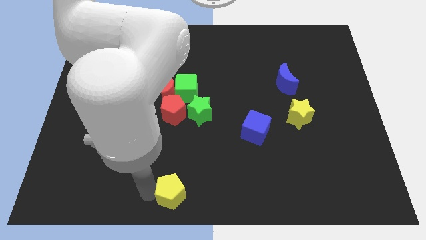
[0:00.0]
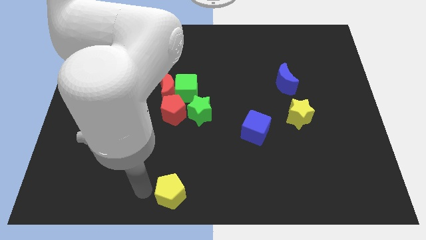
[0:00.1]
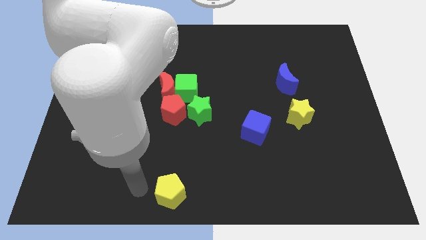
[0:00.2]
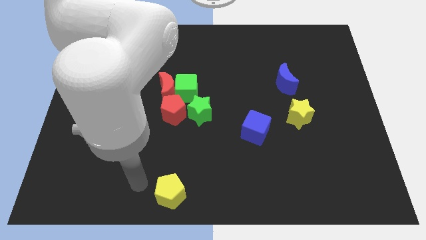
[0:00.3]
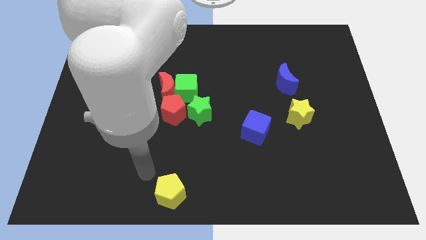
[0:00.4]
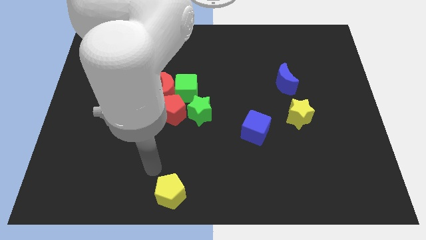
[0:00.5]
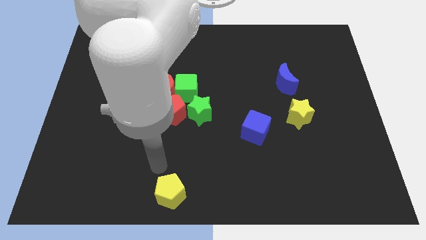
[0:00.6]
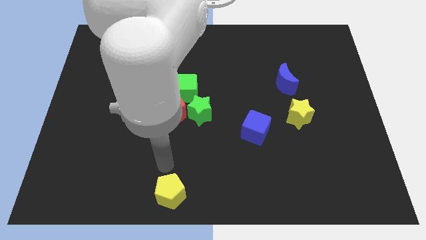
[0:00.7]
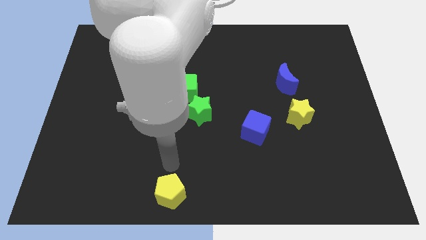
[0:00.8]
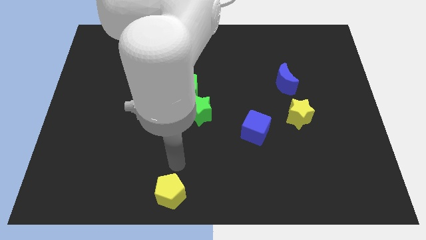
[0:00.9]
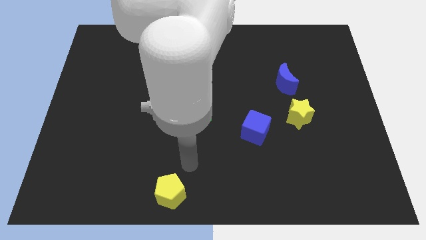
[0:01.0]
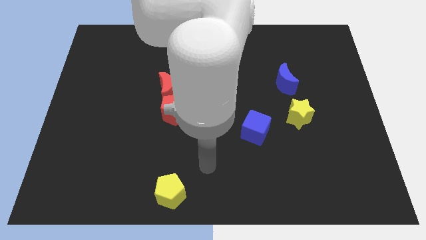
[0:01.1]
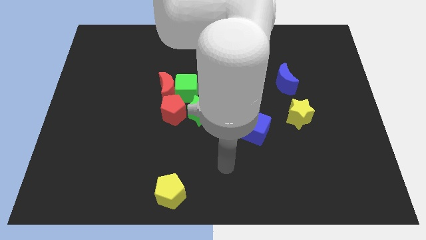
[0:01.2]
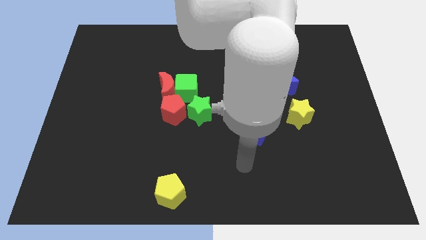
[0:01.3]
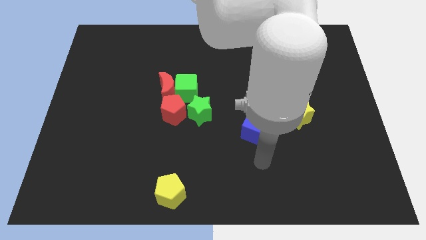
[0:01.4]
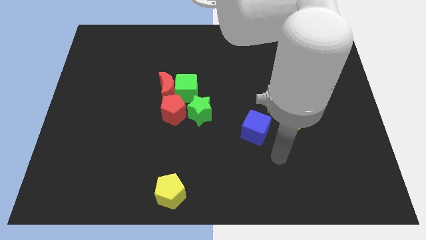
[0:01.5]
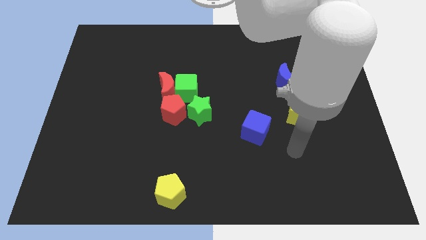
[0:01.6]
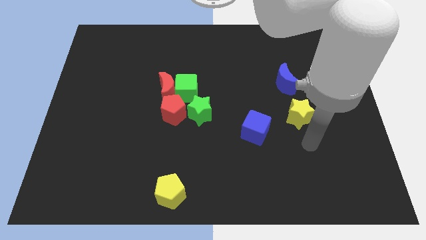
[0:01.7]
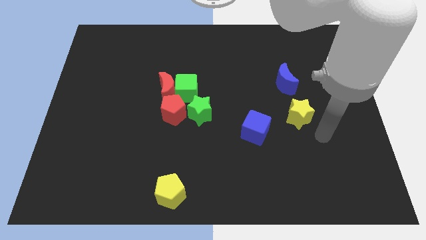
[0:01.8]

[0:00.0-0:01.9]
move your arm away from yellow pentagon

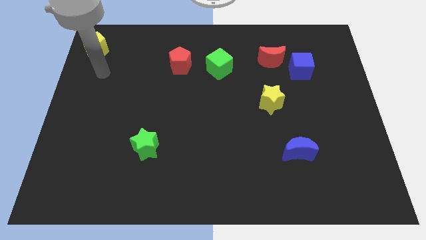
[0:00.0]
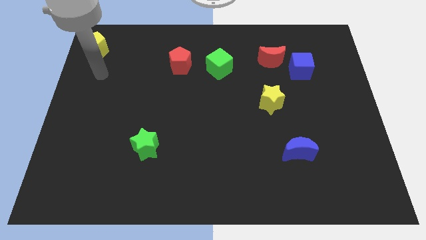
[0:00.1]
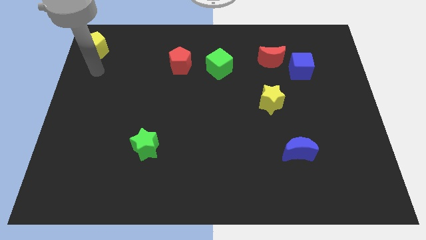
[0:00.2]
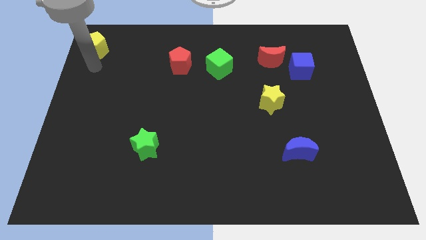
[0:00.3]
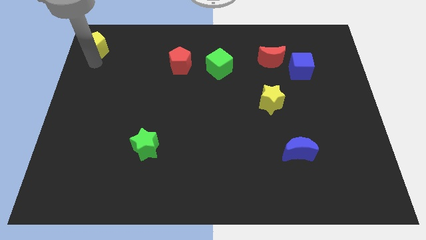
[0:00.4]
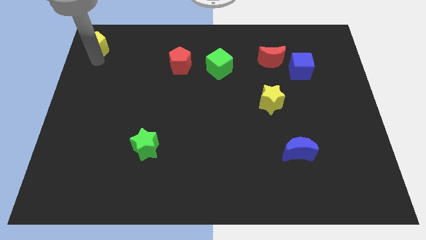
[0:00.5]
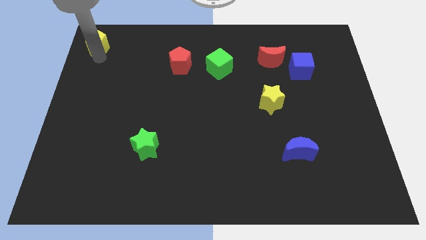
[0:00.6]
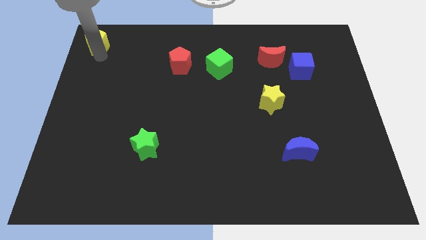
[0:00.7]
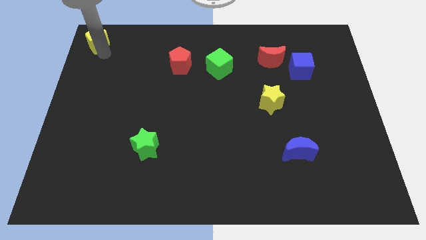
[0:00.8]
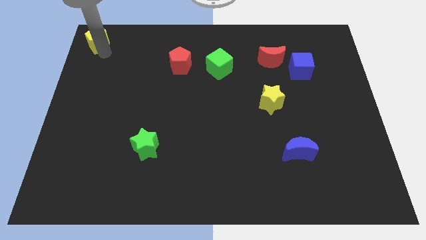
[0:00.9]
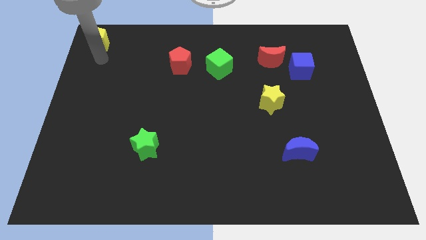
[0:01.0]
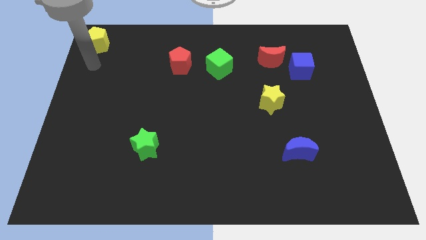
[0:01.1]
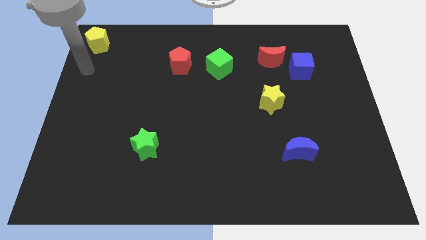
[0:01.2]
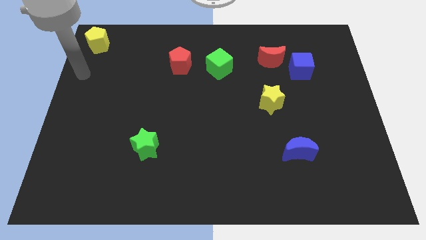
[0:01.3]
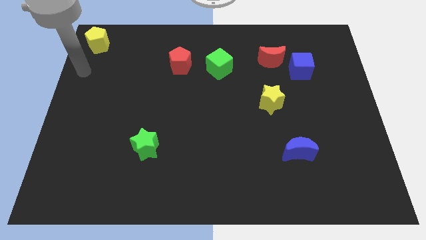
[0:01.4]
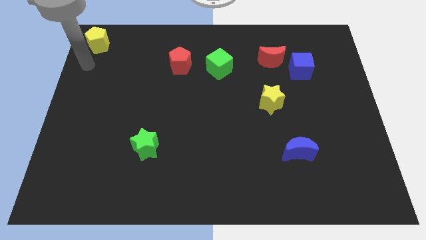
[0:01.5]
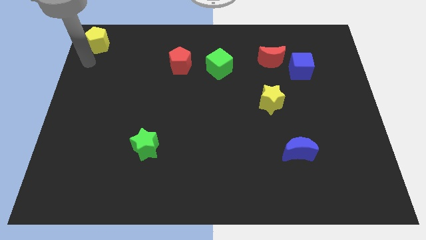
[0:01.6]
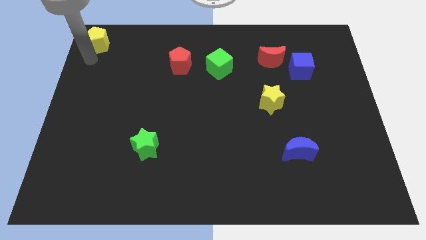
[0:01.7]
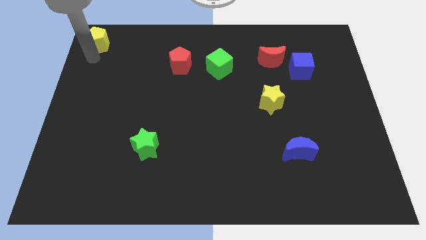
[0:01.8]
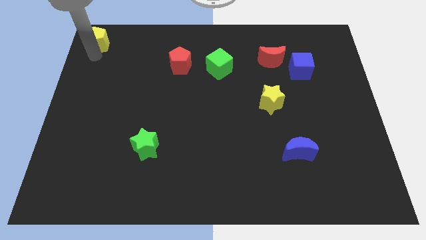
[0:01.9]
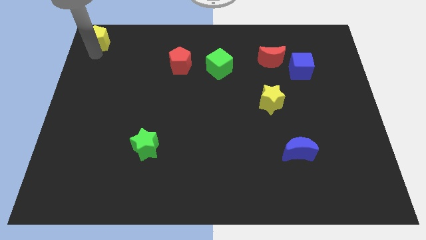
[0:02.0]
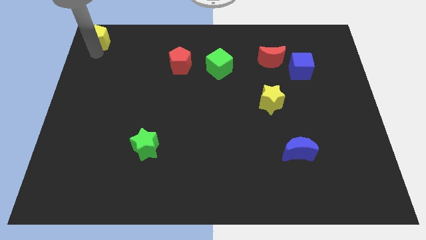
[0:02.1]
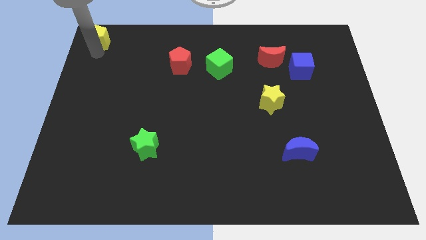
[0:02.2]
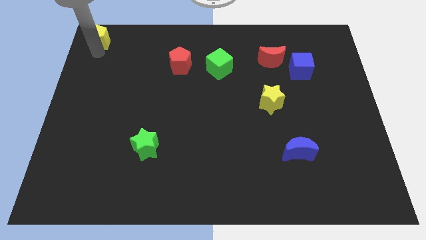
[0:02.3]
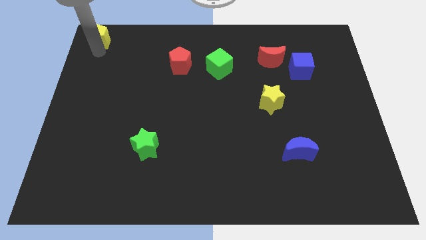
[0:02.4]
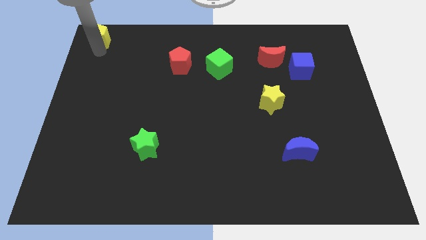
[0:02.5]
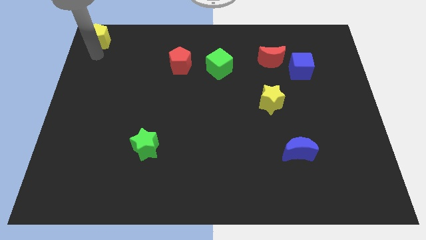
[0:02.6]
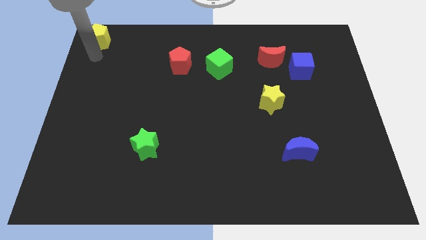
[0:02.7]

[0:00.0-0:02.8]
move the yellow pentagon towards top left corner of the board

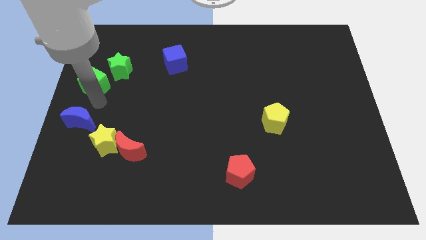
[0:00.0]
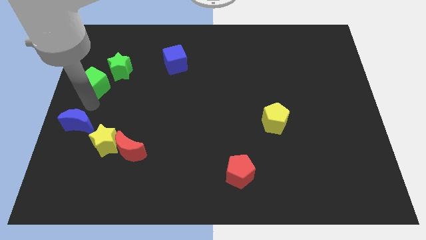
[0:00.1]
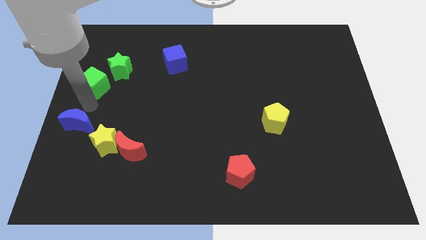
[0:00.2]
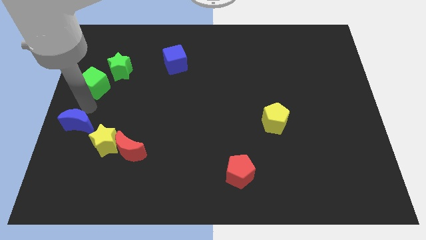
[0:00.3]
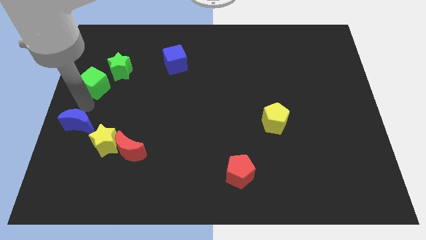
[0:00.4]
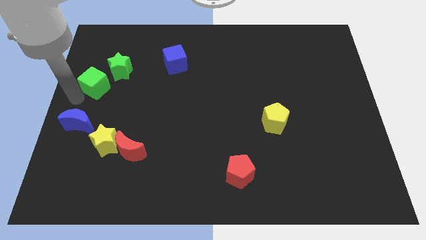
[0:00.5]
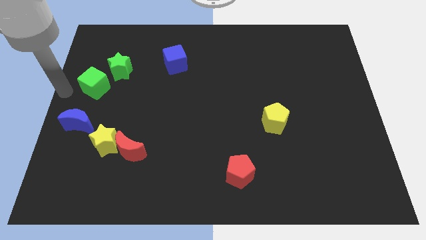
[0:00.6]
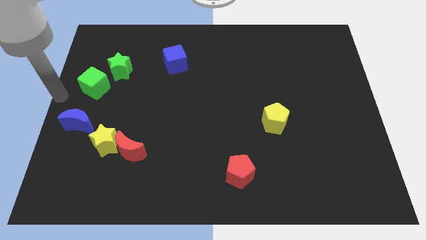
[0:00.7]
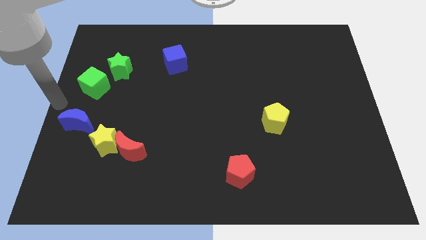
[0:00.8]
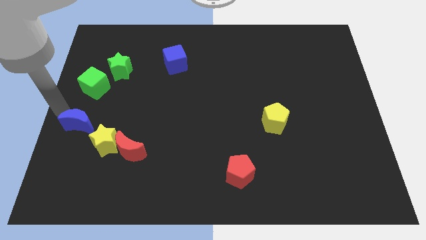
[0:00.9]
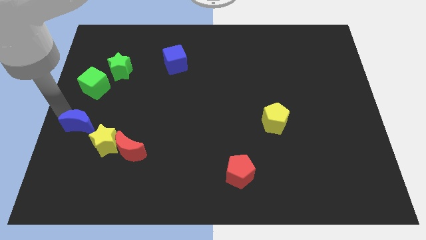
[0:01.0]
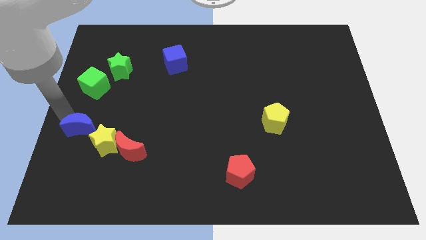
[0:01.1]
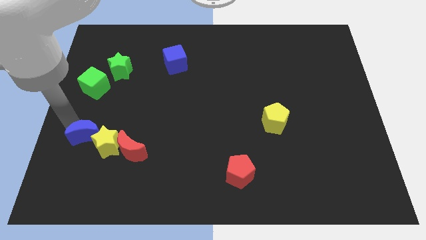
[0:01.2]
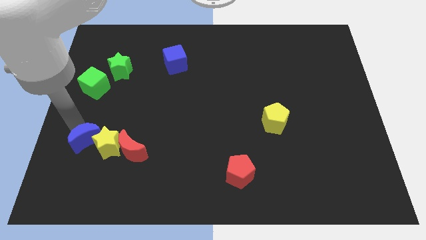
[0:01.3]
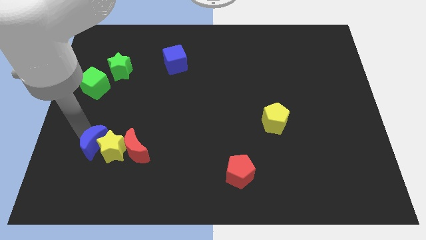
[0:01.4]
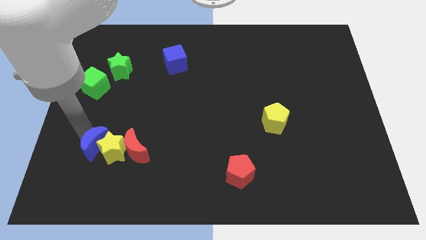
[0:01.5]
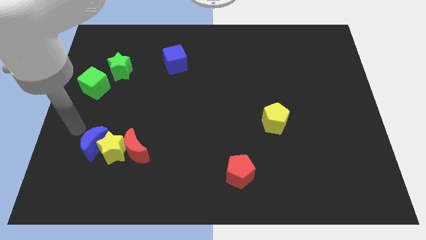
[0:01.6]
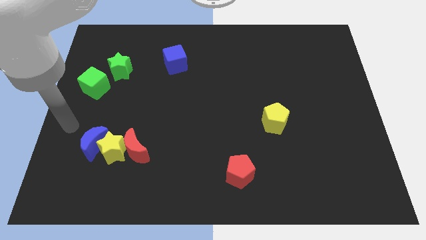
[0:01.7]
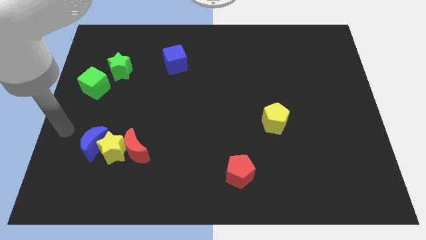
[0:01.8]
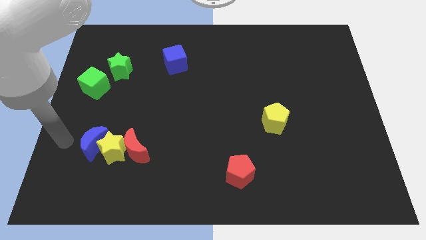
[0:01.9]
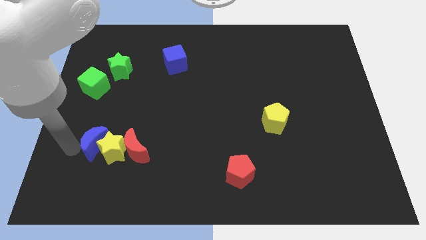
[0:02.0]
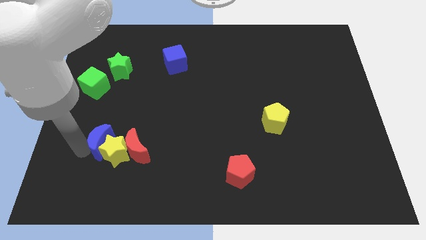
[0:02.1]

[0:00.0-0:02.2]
push the blue moon into the yellow star

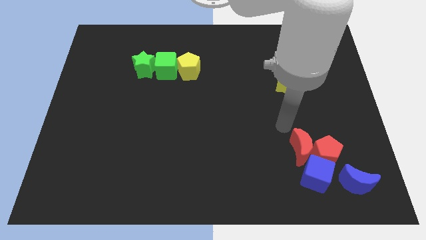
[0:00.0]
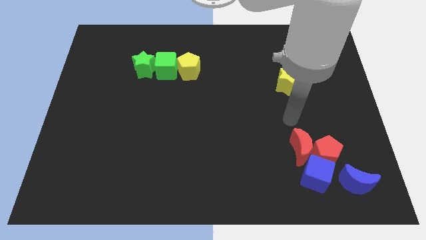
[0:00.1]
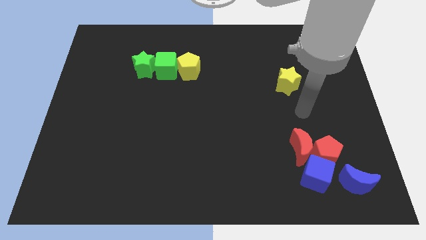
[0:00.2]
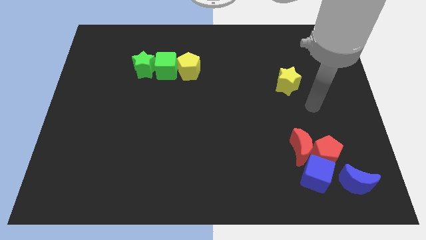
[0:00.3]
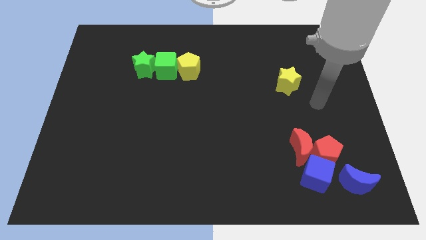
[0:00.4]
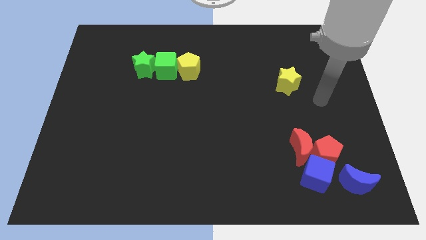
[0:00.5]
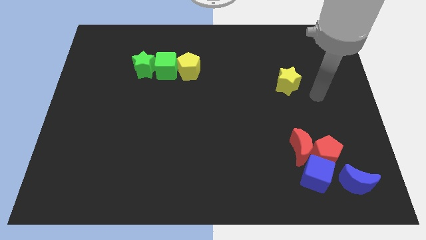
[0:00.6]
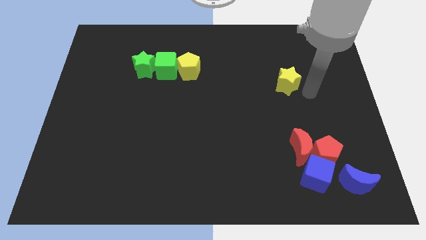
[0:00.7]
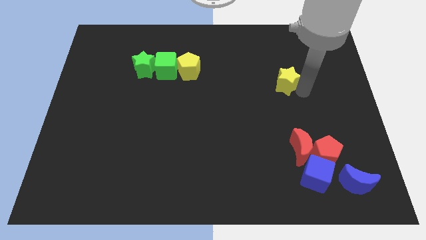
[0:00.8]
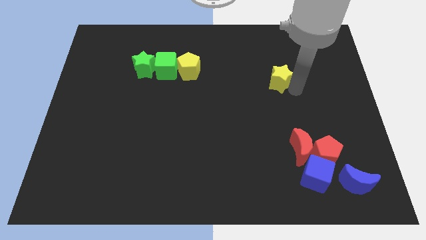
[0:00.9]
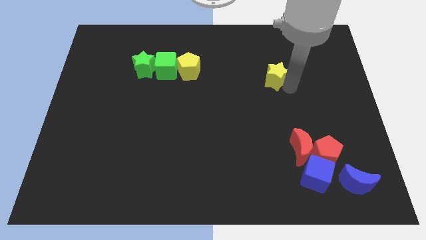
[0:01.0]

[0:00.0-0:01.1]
move the yellow pentagon slightly to the left side

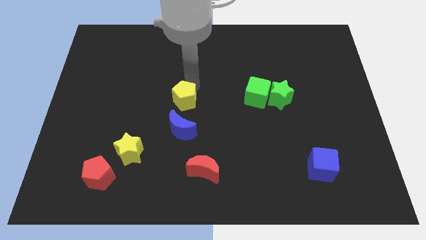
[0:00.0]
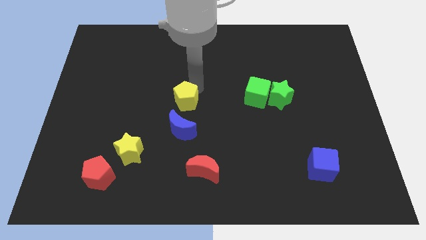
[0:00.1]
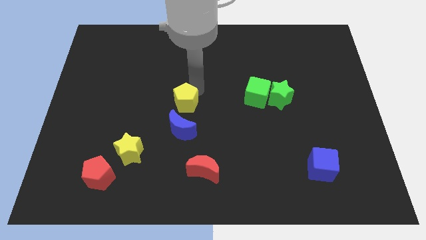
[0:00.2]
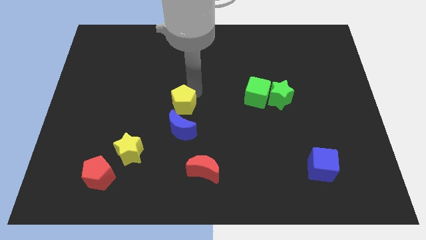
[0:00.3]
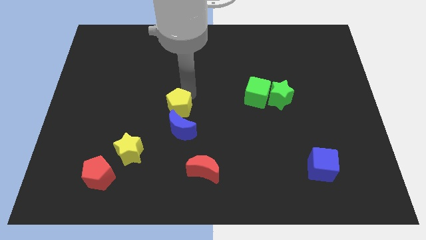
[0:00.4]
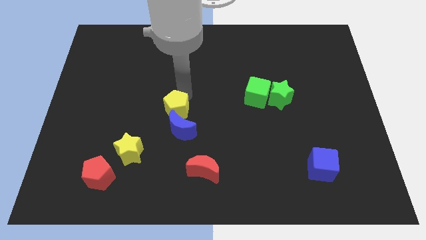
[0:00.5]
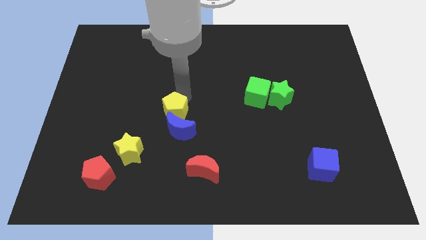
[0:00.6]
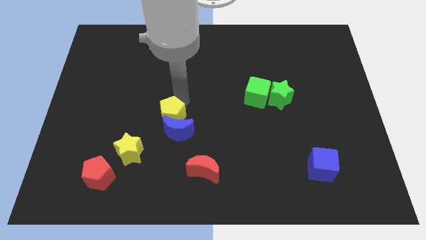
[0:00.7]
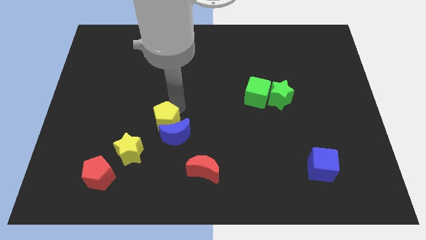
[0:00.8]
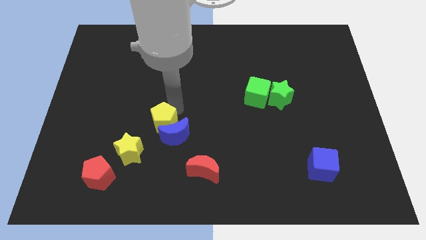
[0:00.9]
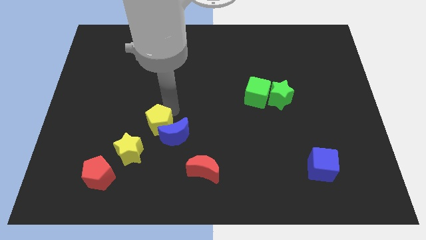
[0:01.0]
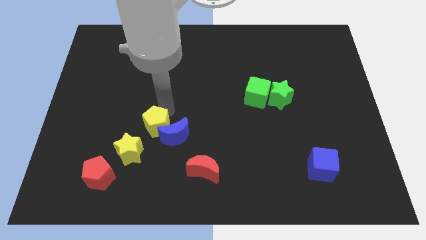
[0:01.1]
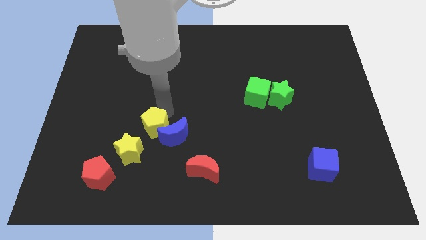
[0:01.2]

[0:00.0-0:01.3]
push yellow pentagon in to blue moon
